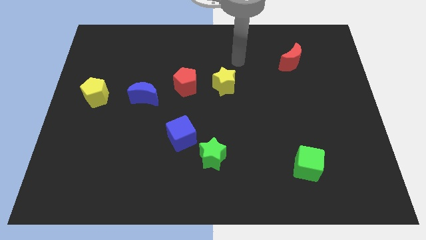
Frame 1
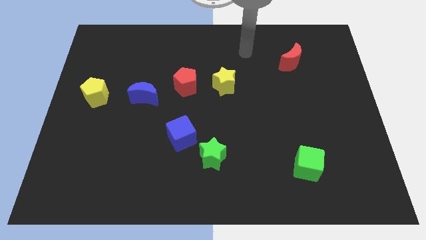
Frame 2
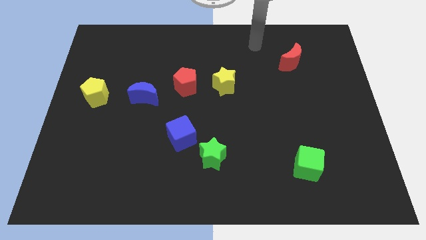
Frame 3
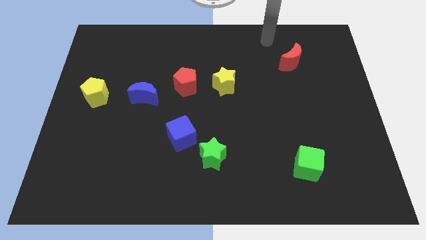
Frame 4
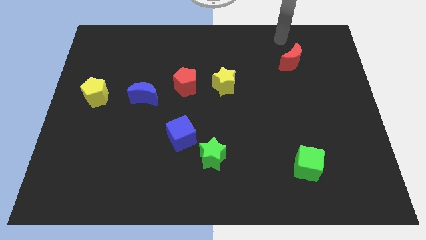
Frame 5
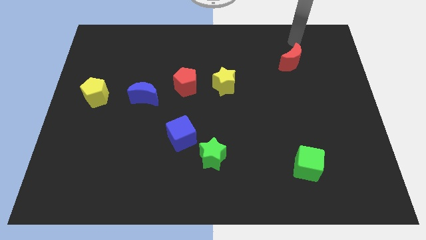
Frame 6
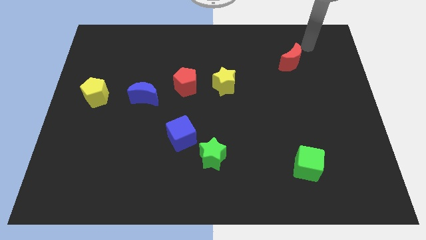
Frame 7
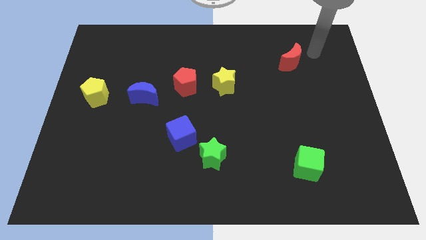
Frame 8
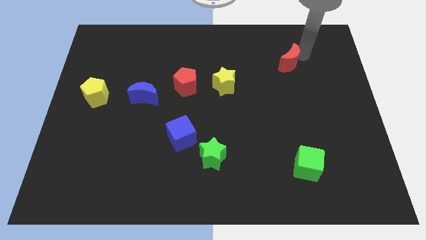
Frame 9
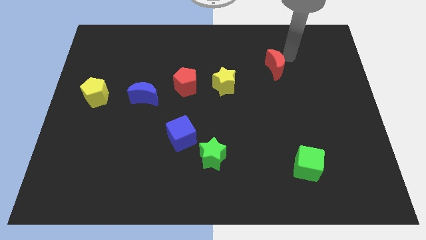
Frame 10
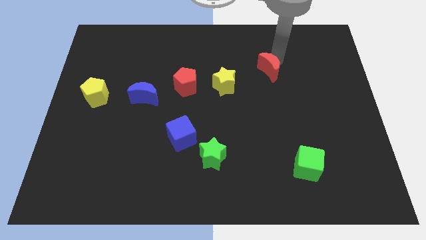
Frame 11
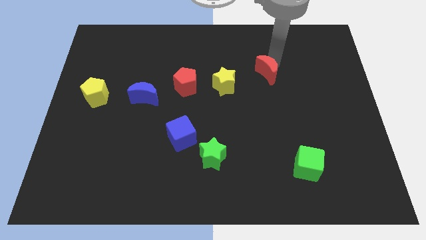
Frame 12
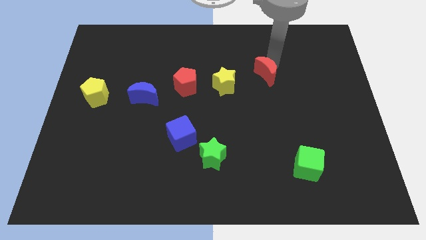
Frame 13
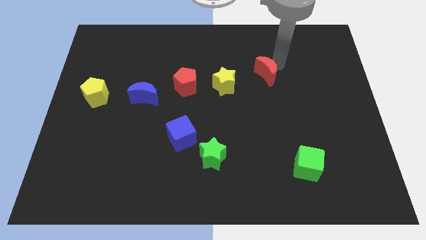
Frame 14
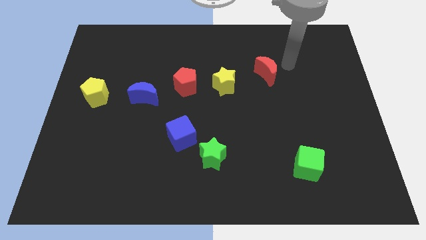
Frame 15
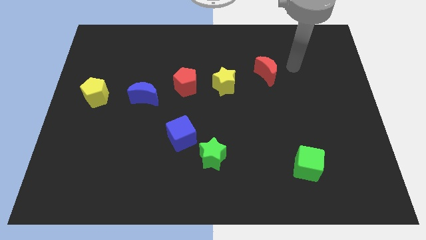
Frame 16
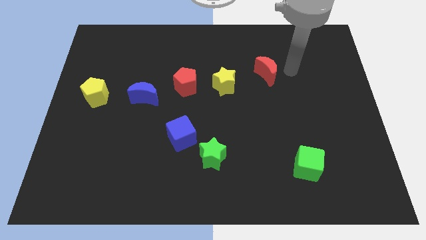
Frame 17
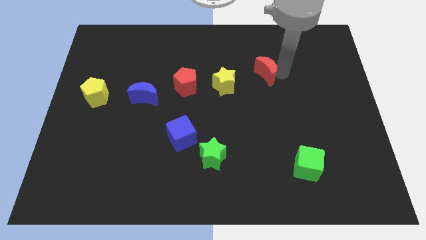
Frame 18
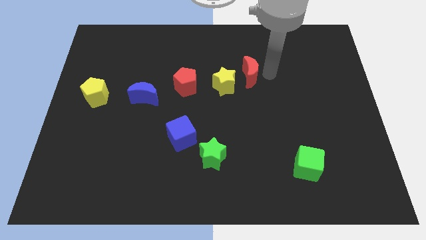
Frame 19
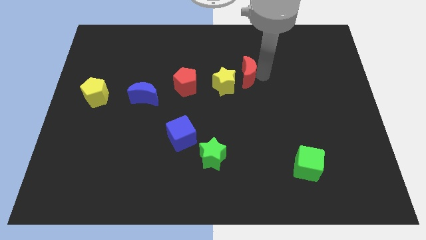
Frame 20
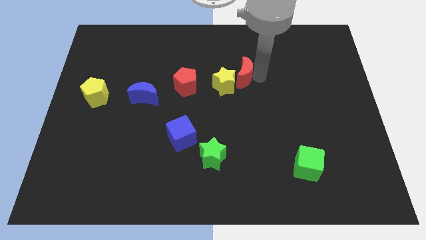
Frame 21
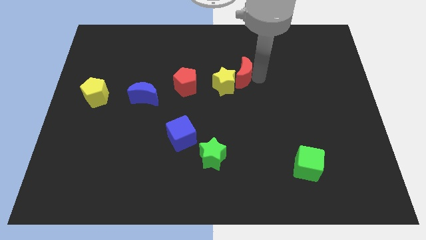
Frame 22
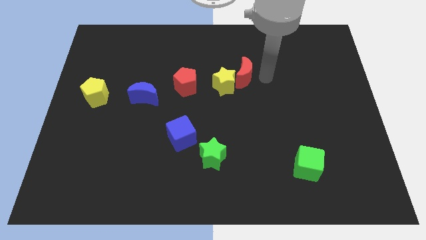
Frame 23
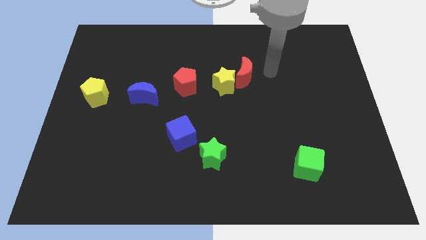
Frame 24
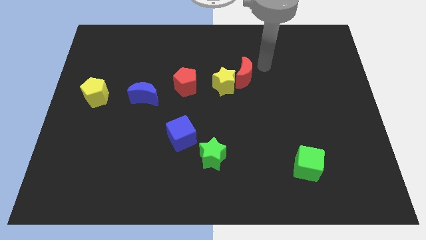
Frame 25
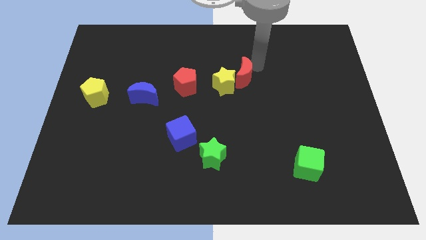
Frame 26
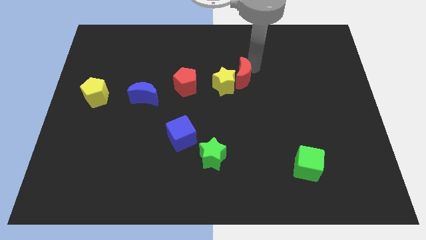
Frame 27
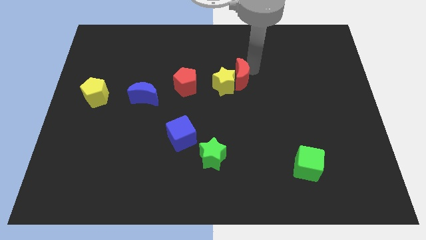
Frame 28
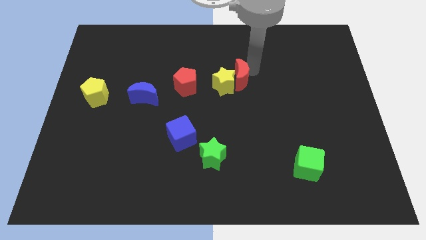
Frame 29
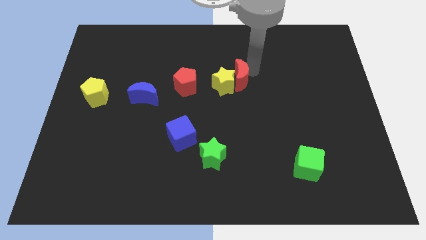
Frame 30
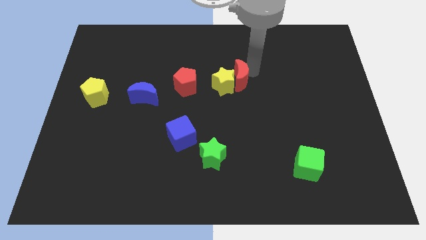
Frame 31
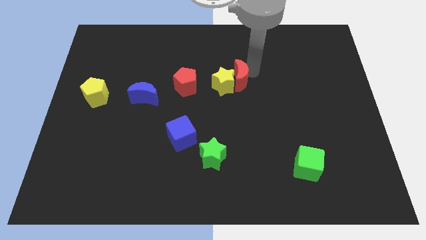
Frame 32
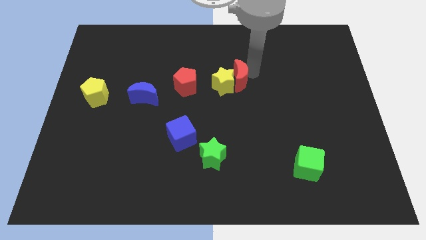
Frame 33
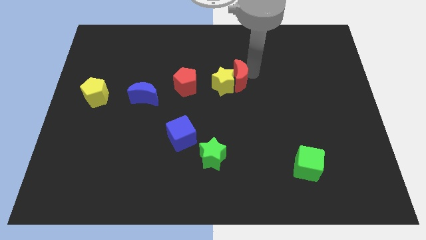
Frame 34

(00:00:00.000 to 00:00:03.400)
push red crescent to the right of yellow star

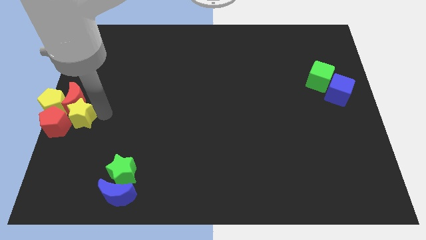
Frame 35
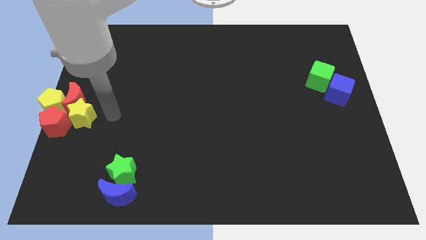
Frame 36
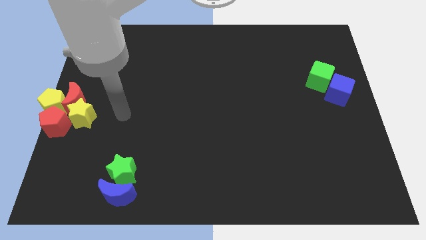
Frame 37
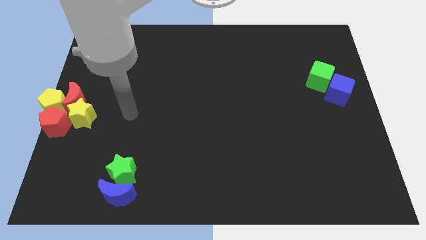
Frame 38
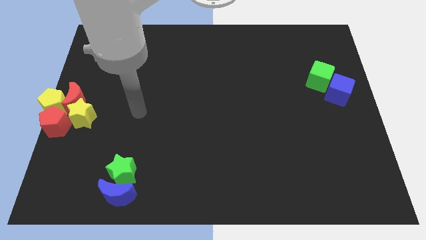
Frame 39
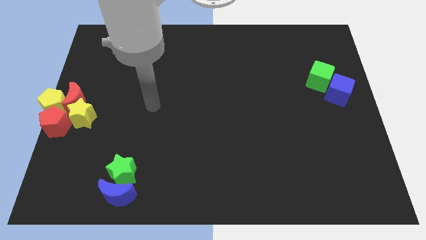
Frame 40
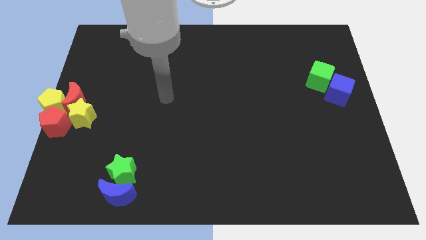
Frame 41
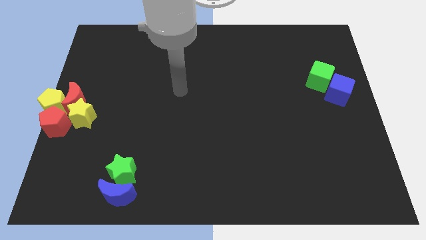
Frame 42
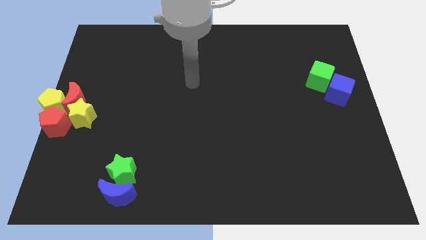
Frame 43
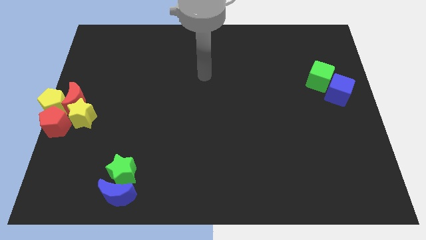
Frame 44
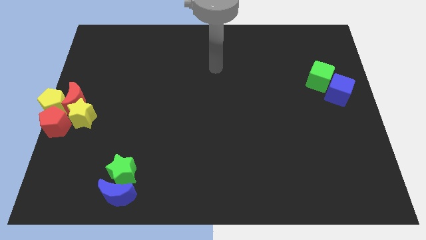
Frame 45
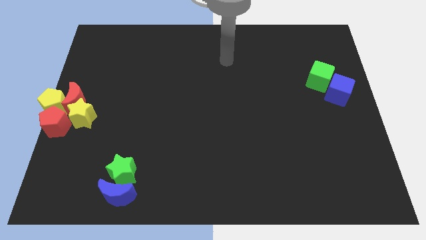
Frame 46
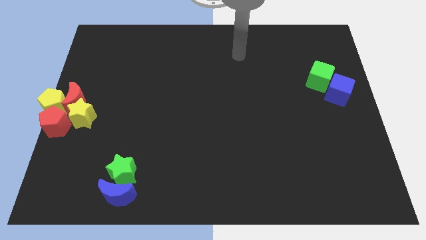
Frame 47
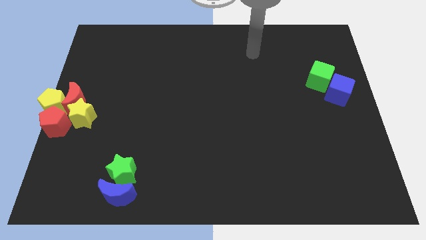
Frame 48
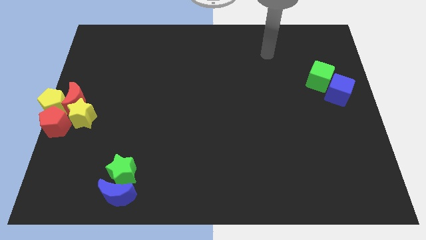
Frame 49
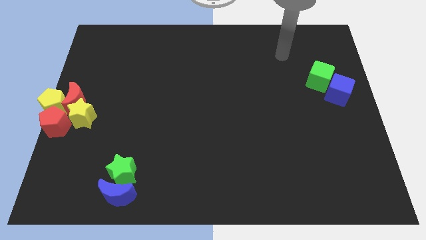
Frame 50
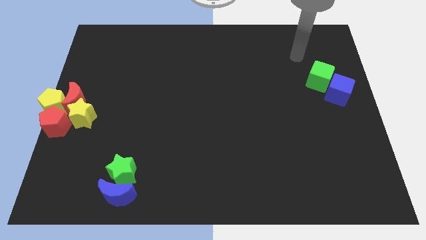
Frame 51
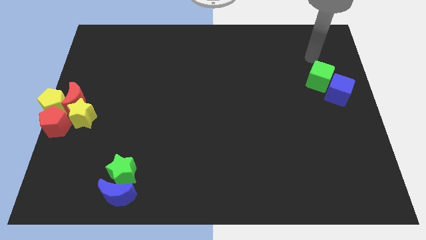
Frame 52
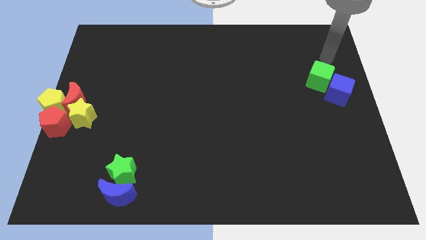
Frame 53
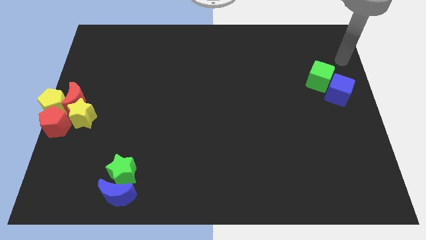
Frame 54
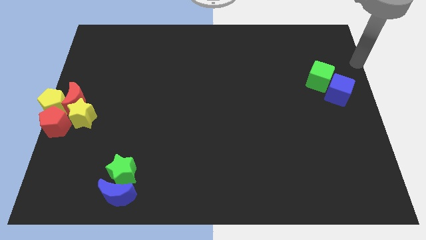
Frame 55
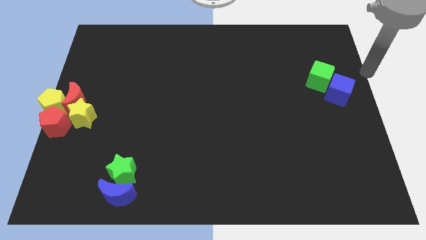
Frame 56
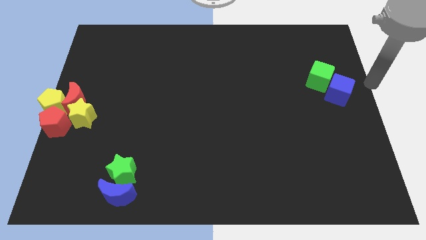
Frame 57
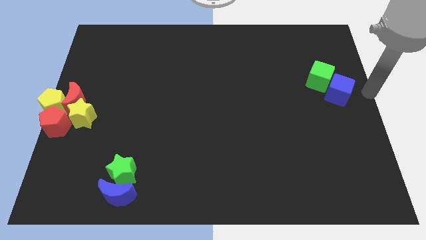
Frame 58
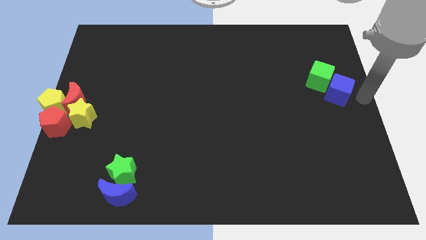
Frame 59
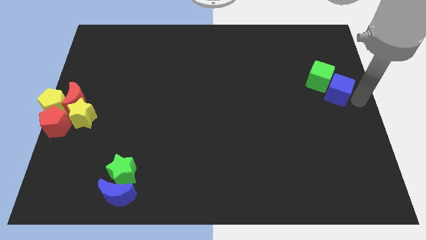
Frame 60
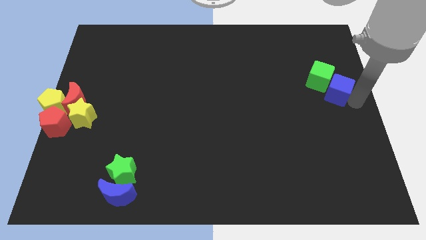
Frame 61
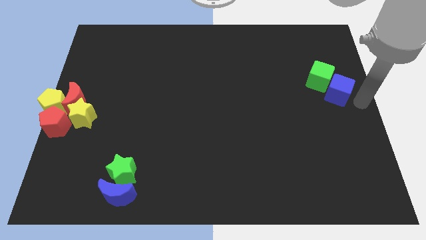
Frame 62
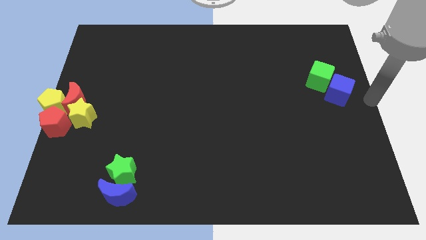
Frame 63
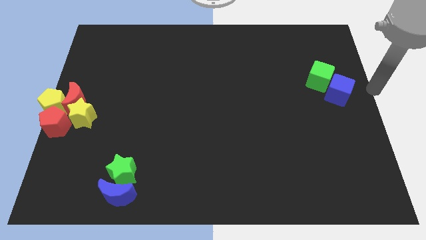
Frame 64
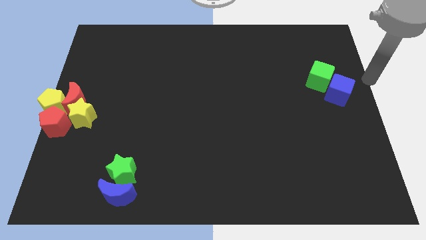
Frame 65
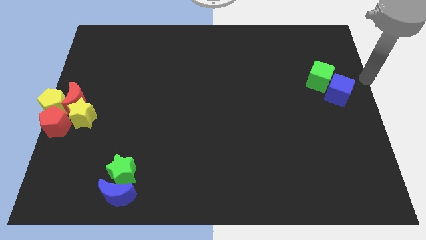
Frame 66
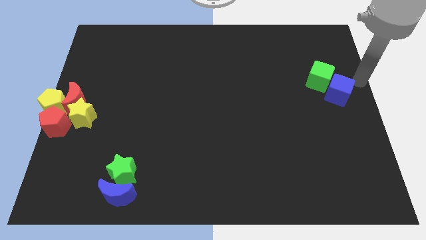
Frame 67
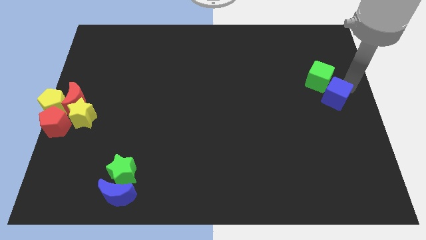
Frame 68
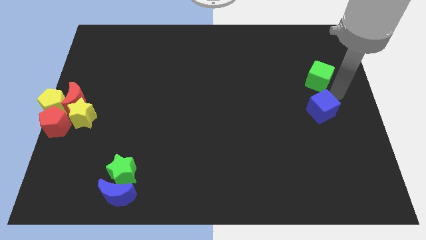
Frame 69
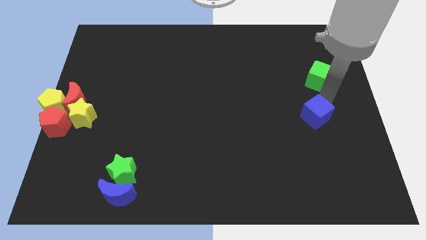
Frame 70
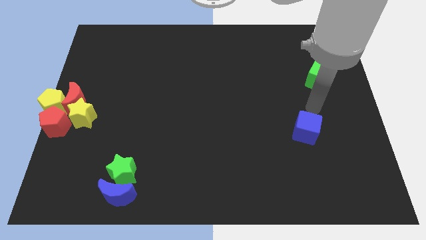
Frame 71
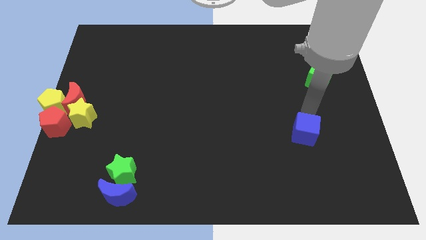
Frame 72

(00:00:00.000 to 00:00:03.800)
separate the blue cube from the green cube

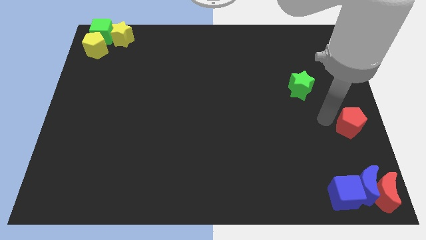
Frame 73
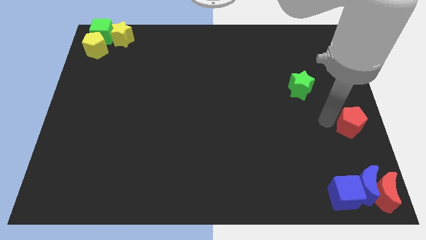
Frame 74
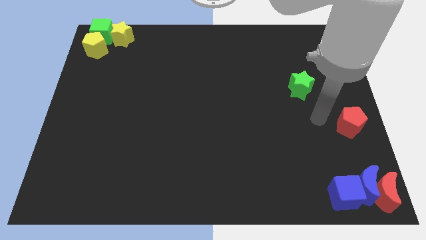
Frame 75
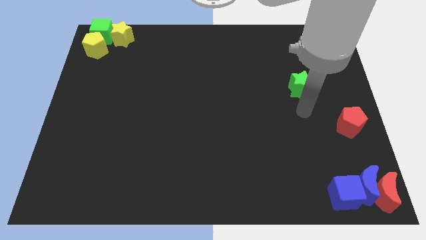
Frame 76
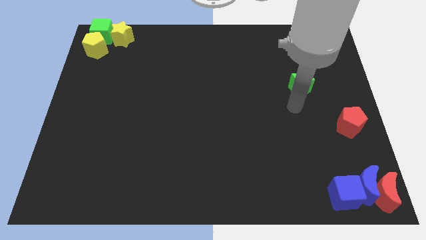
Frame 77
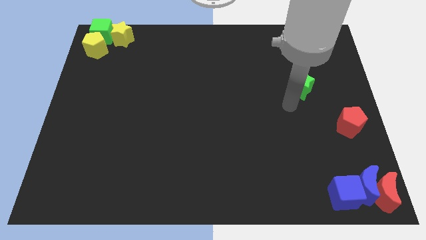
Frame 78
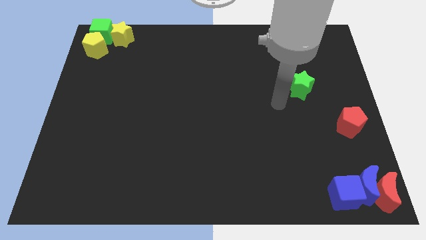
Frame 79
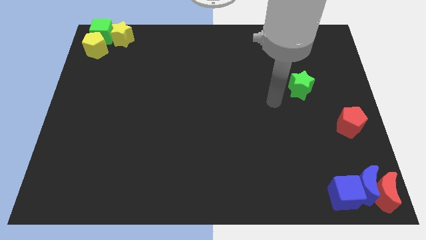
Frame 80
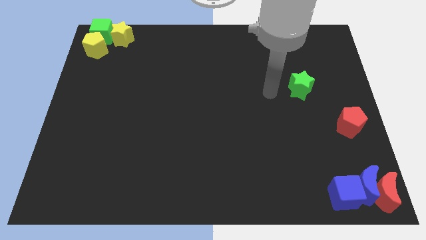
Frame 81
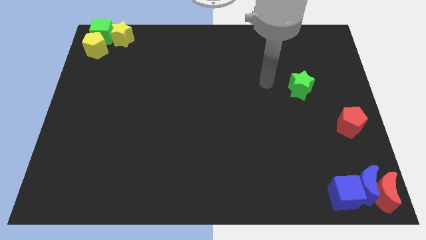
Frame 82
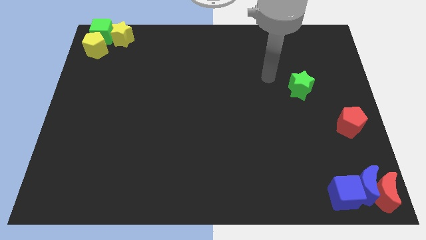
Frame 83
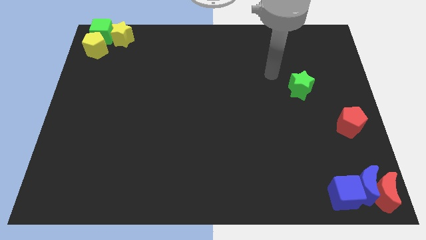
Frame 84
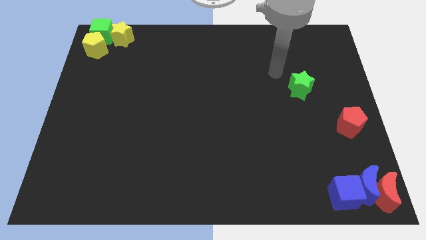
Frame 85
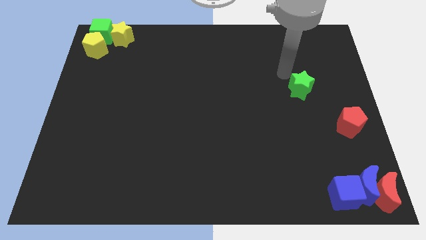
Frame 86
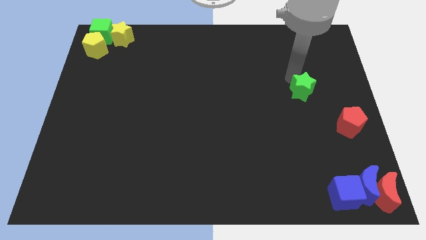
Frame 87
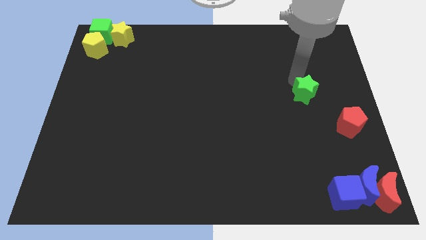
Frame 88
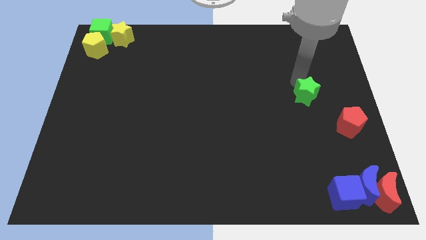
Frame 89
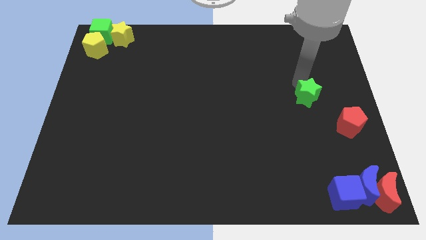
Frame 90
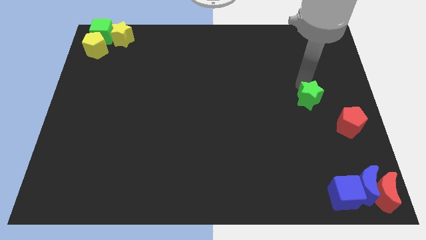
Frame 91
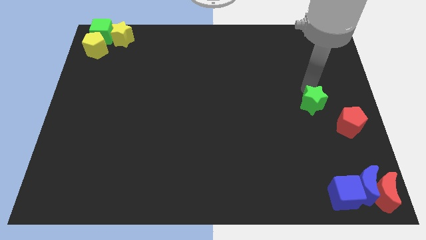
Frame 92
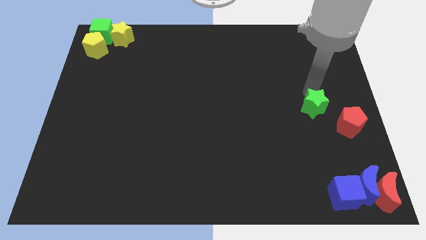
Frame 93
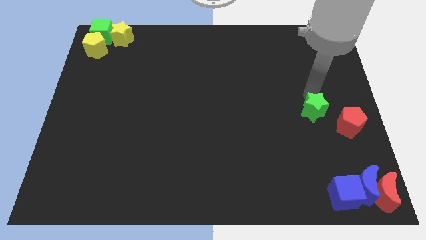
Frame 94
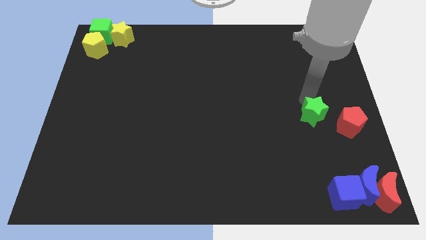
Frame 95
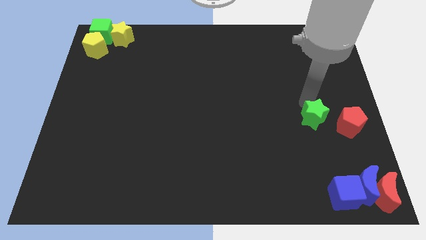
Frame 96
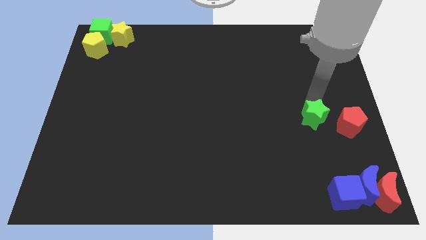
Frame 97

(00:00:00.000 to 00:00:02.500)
place green star beside red pentagon
